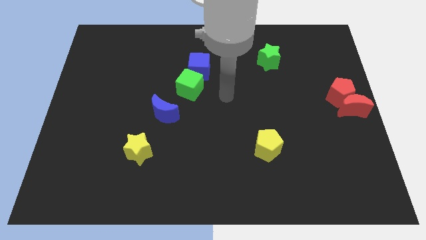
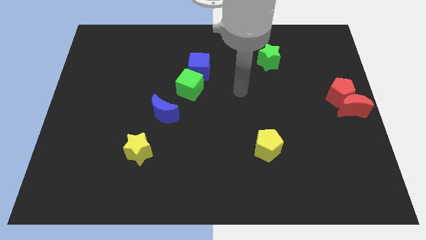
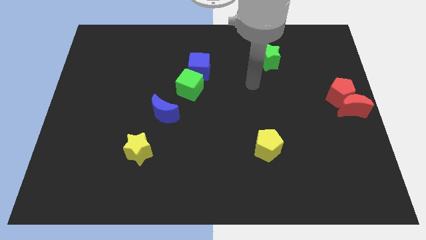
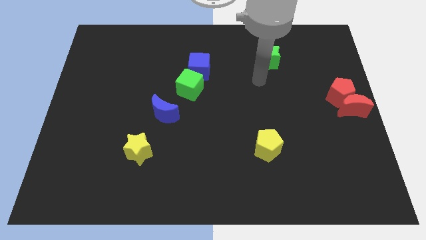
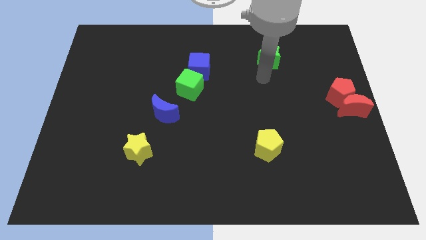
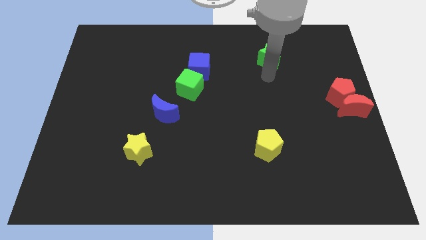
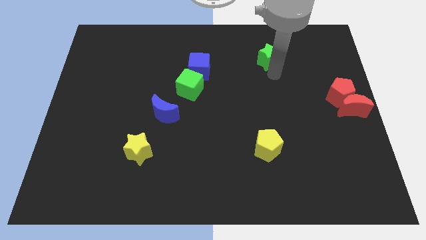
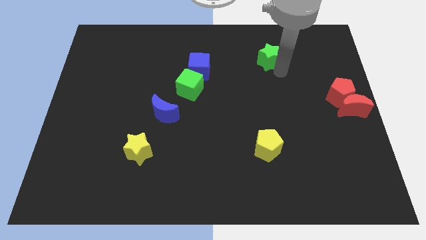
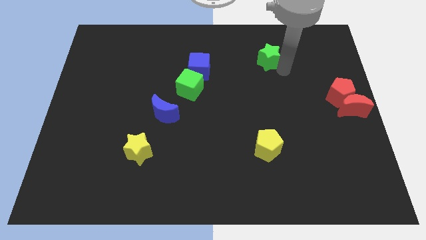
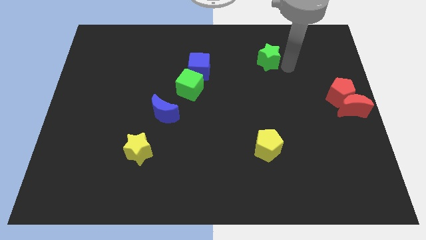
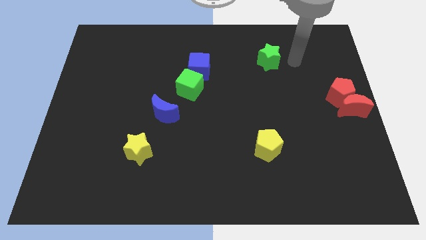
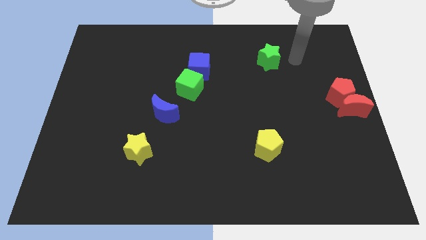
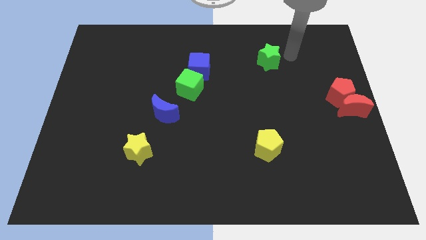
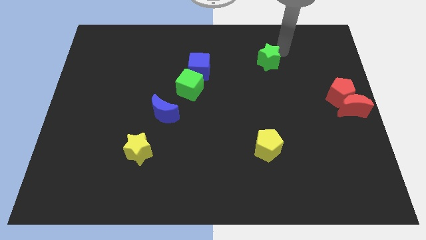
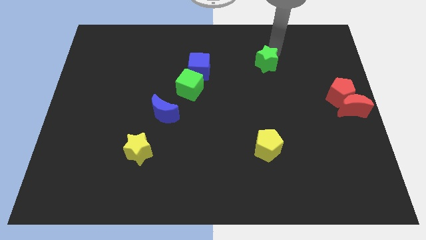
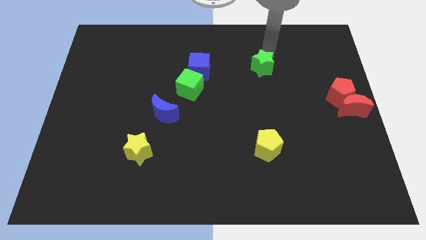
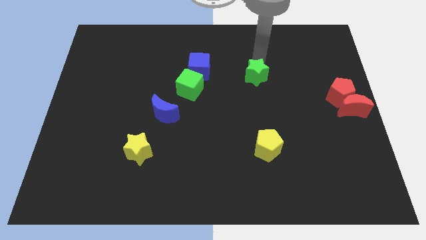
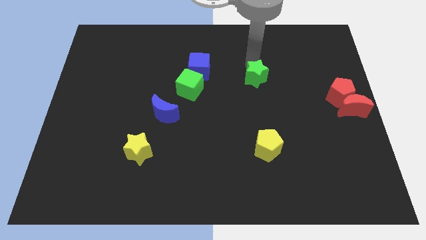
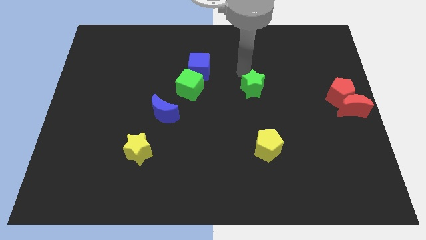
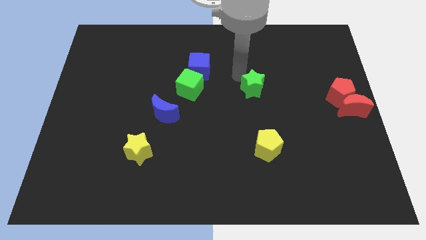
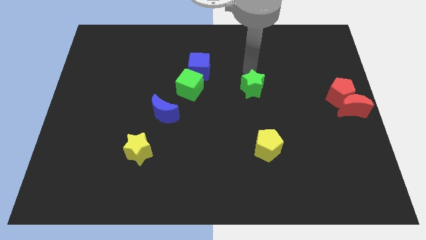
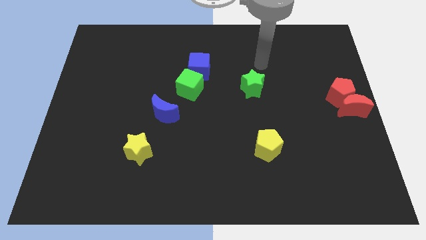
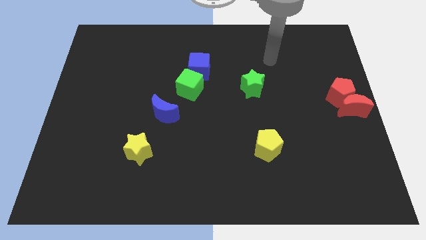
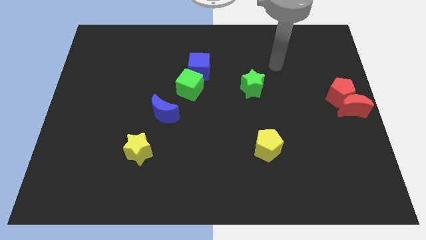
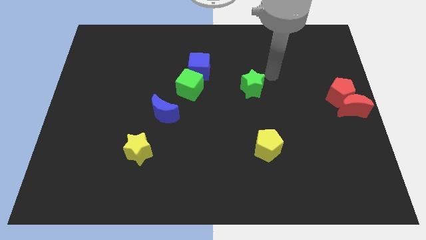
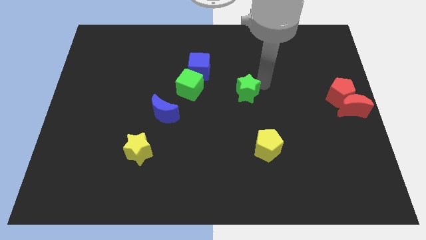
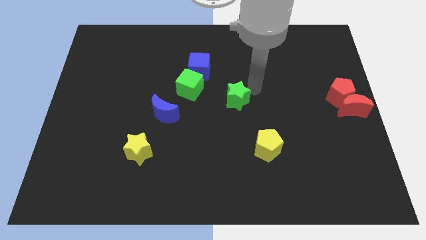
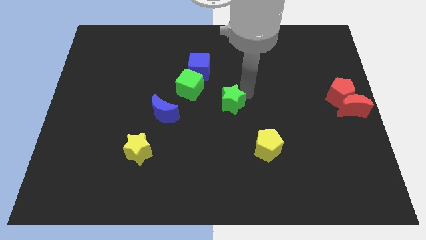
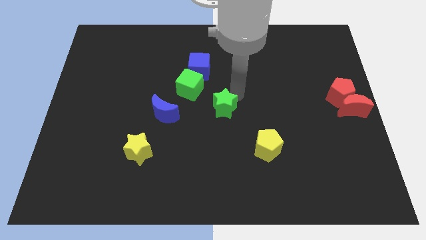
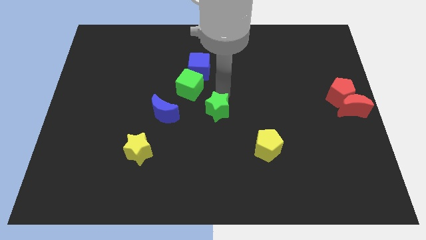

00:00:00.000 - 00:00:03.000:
push green star to center

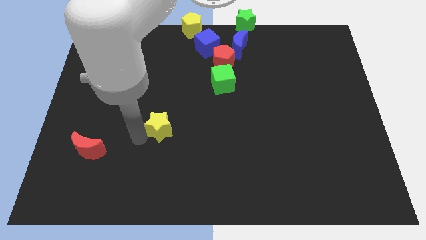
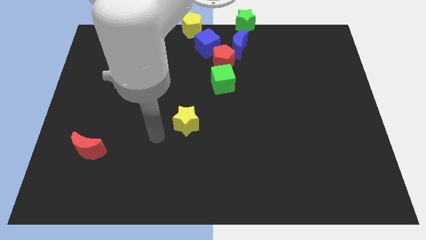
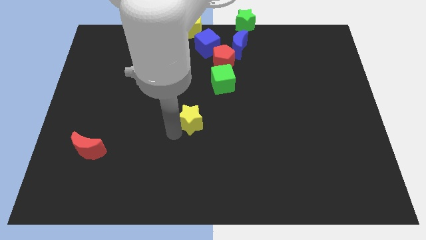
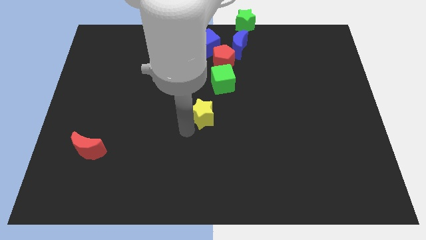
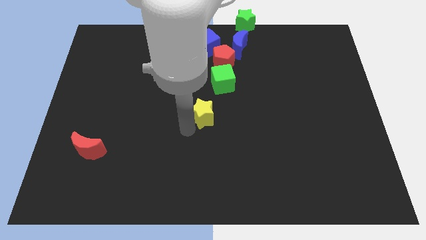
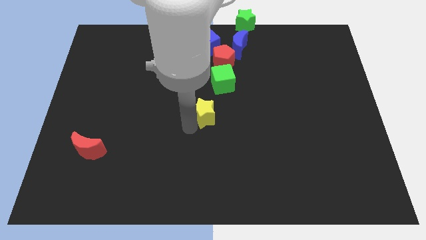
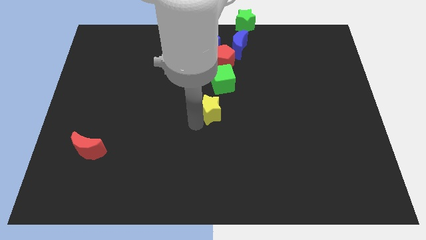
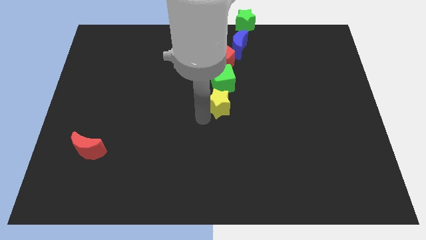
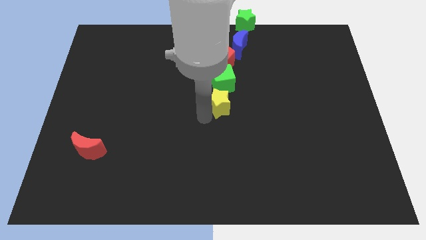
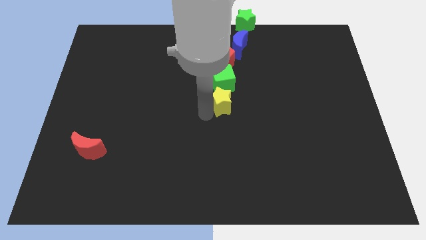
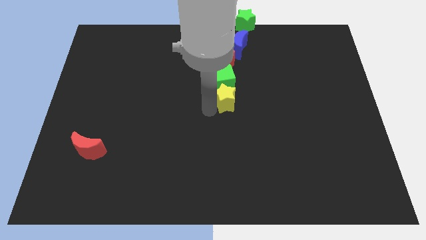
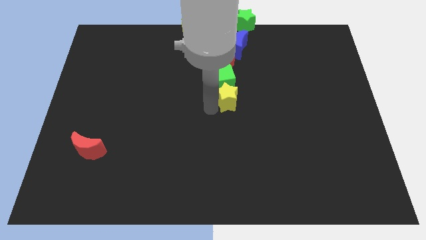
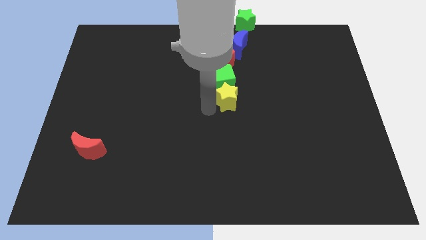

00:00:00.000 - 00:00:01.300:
place yellow star below green cube

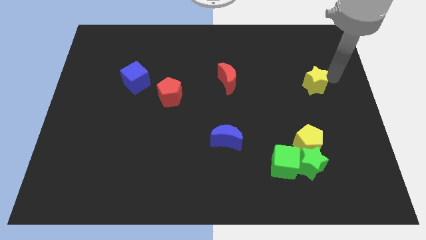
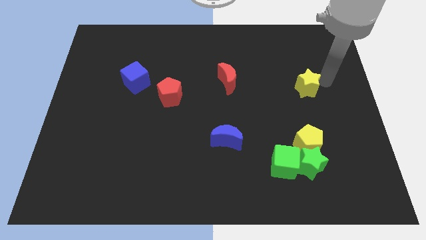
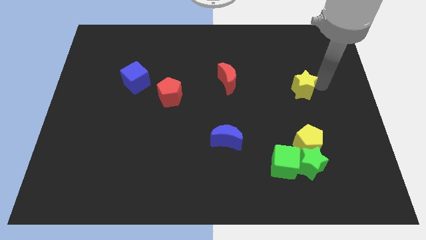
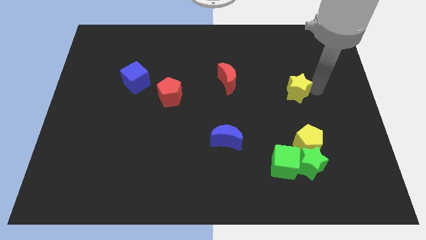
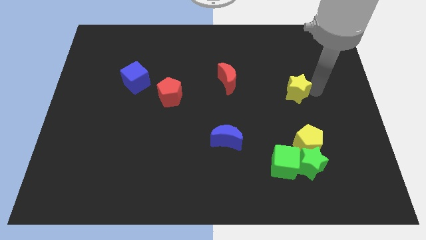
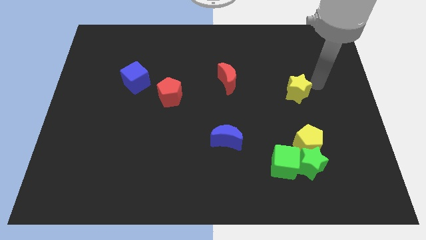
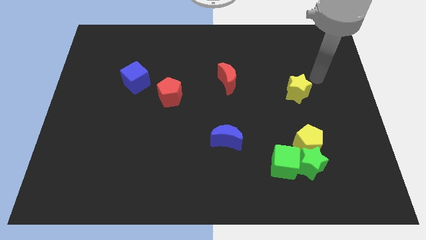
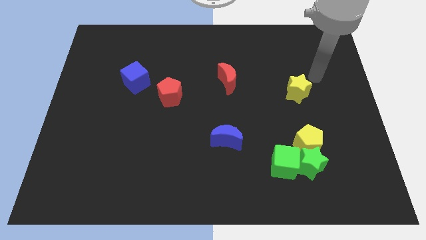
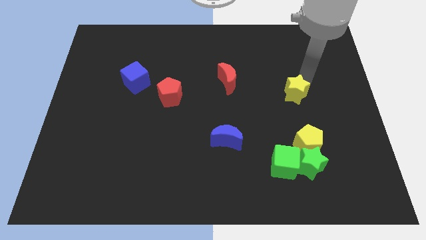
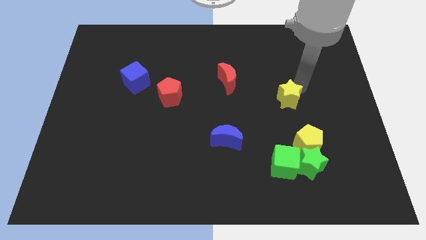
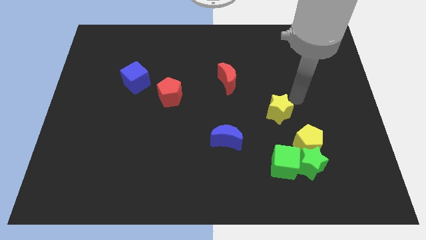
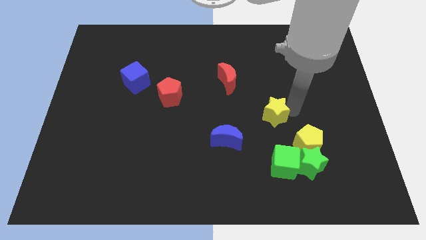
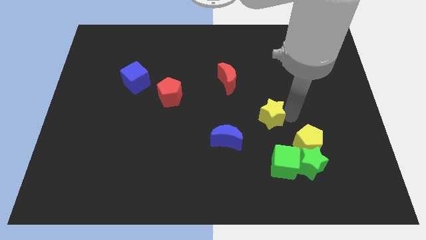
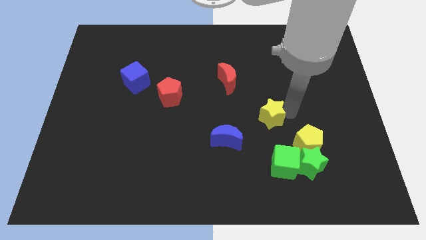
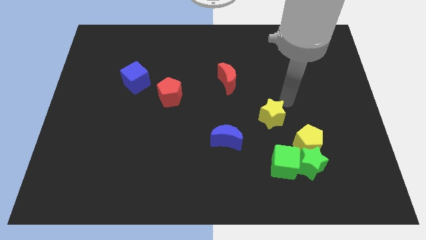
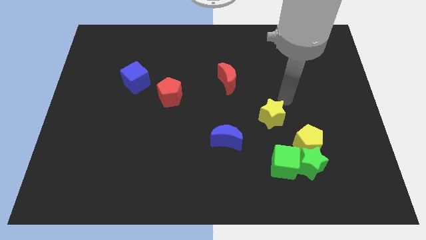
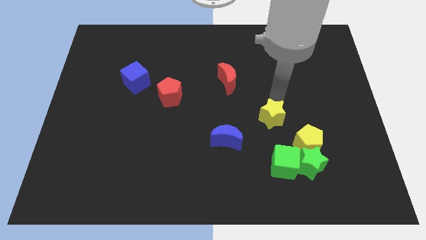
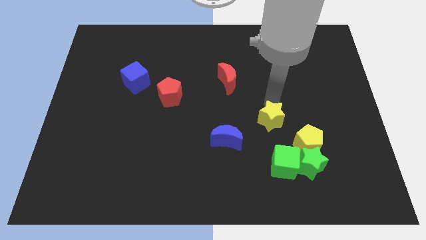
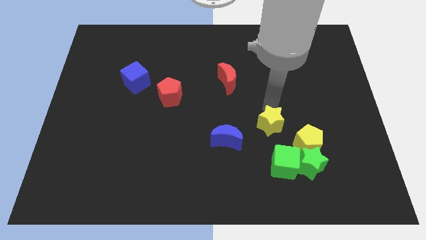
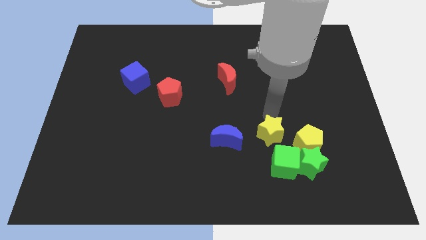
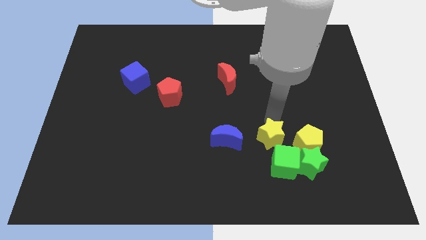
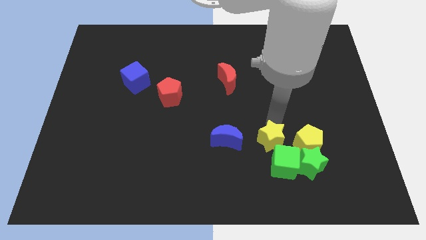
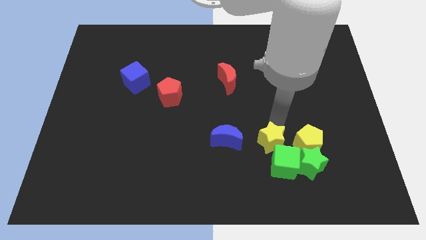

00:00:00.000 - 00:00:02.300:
move the yellow star to the right of the blue crescent

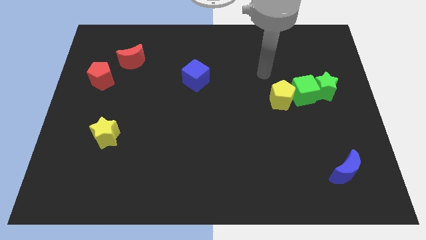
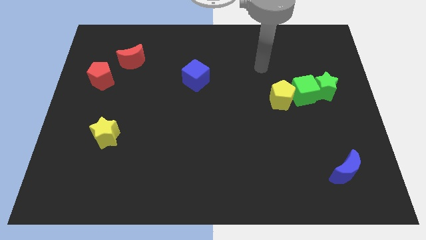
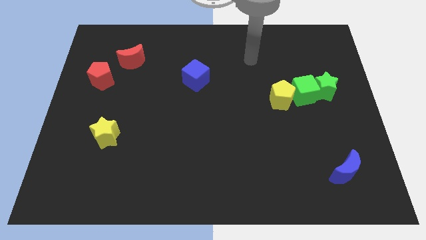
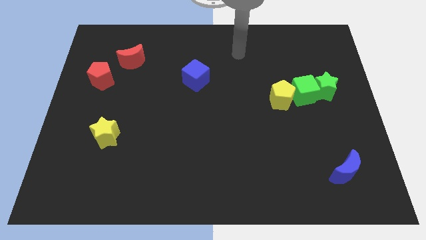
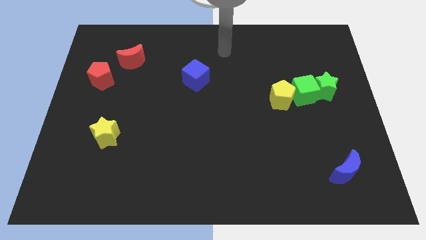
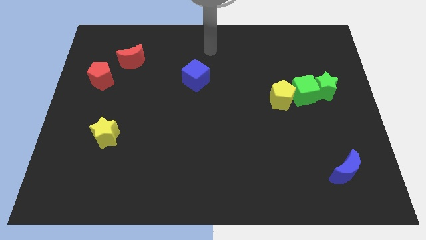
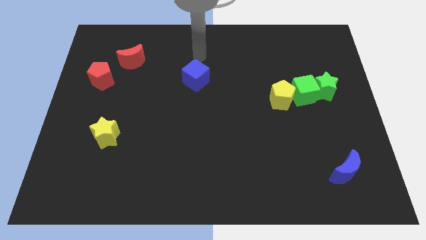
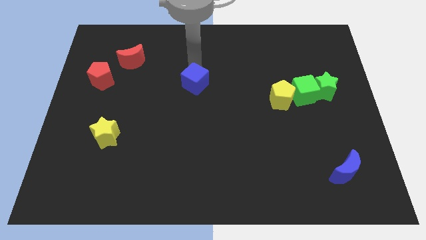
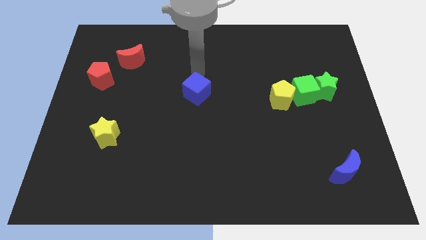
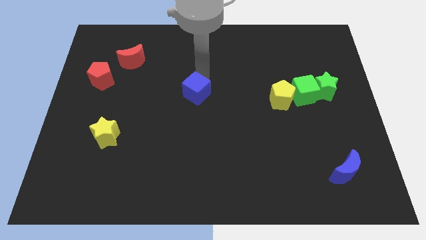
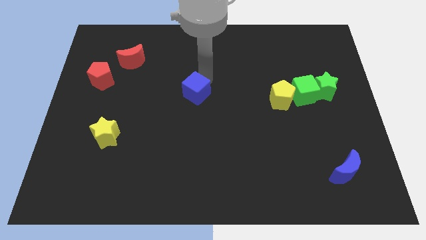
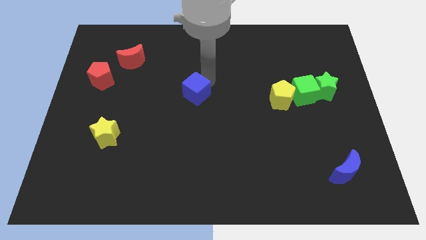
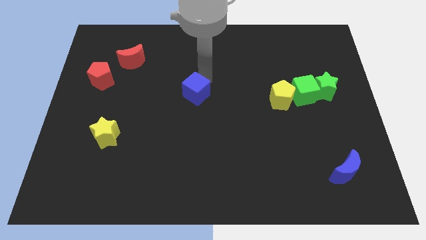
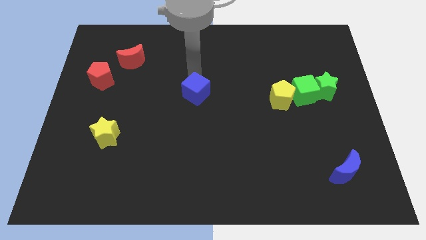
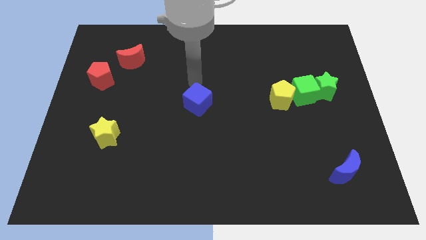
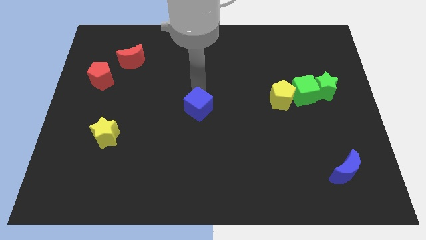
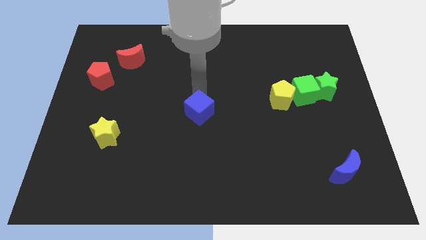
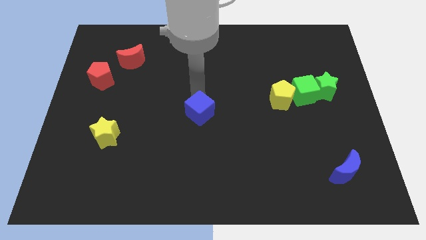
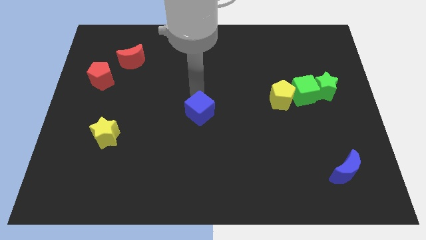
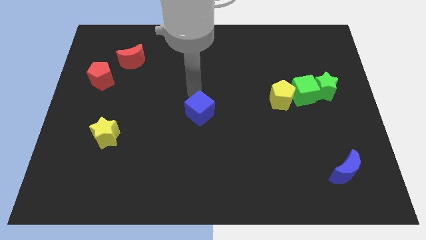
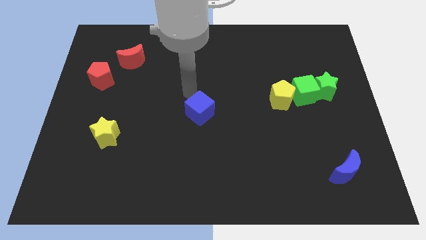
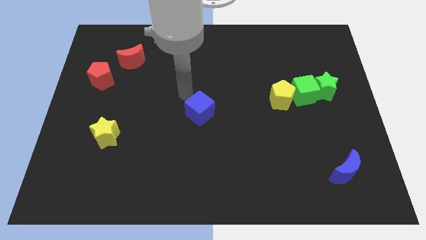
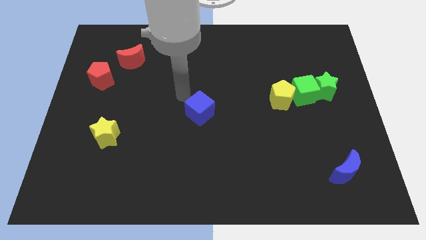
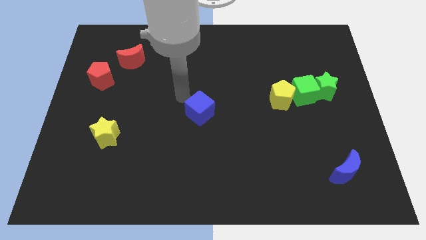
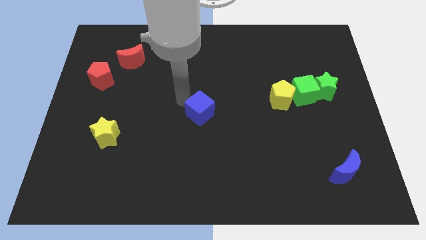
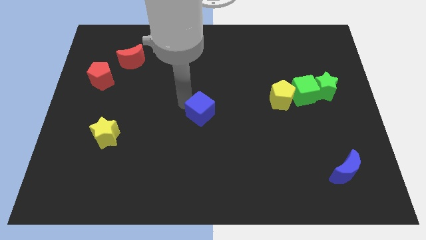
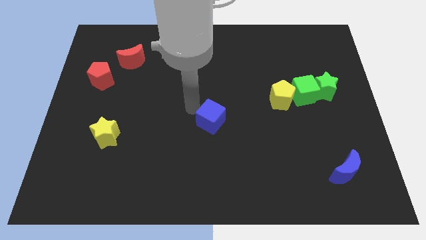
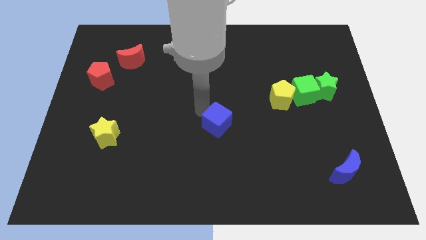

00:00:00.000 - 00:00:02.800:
place the blue cube at the center of the board
